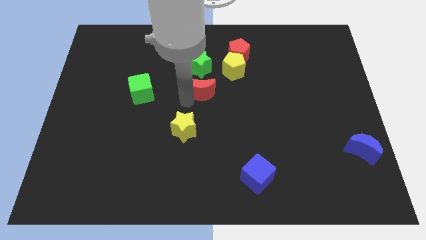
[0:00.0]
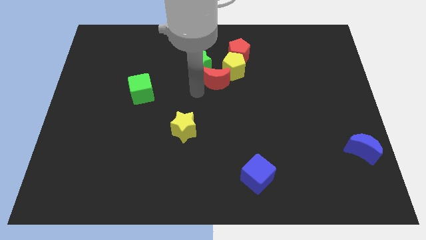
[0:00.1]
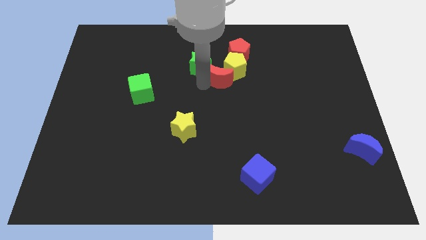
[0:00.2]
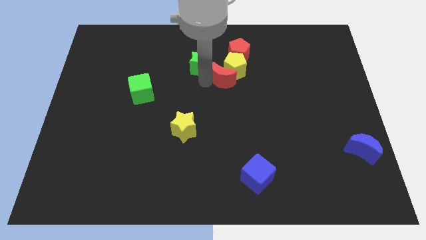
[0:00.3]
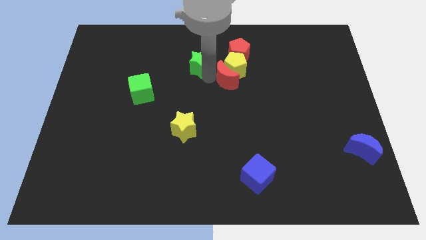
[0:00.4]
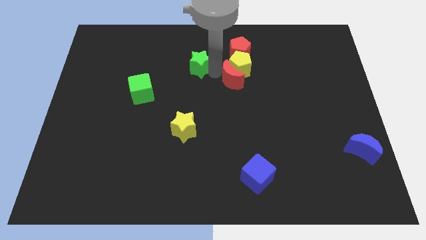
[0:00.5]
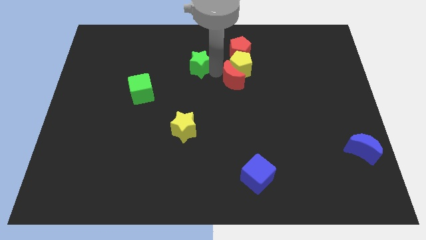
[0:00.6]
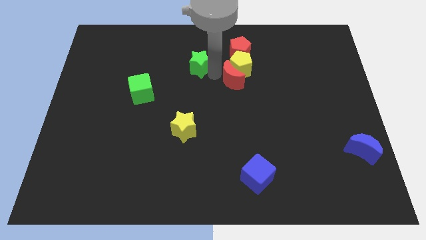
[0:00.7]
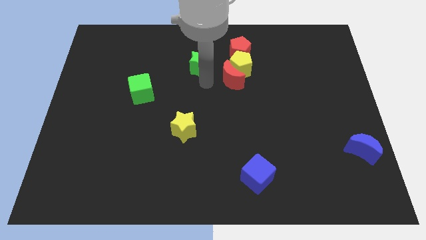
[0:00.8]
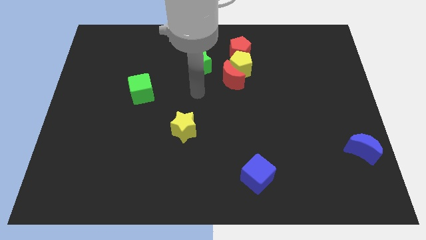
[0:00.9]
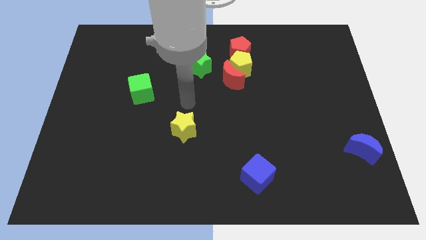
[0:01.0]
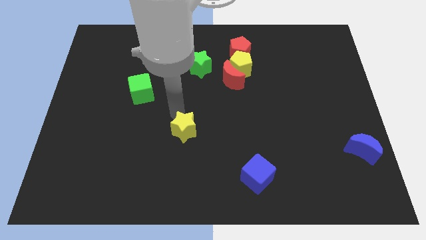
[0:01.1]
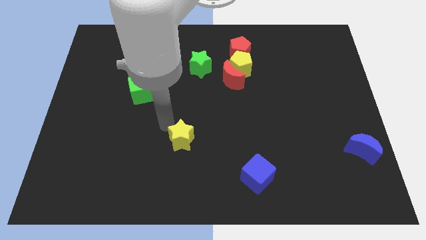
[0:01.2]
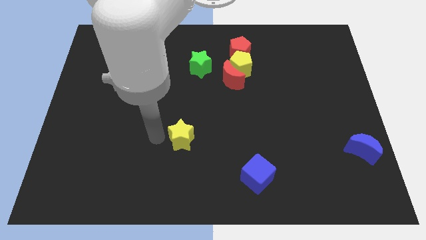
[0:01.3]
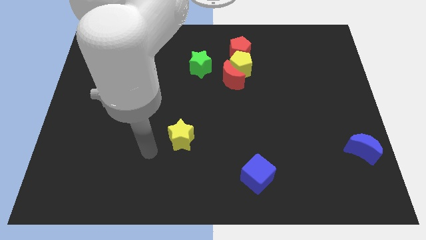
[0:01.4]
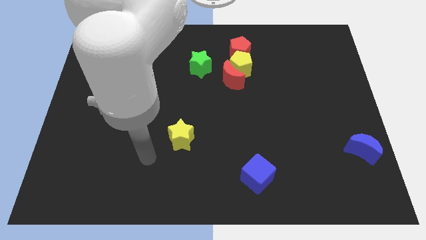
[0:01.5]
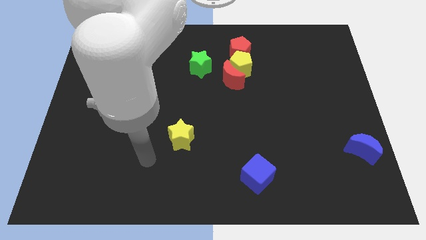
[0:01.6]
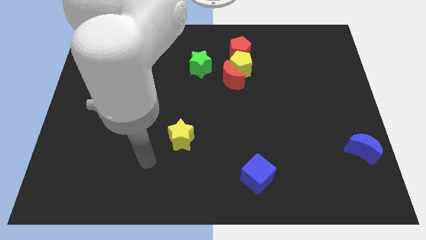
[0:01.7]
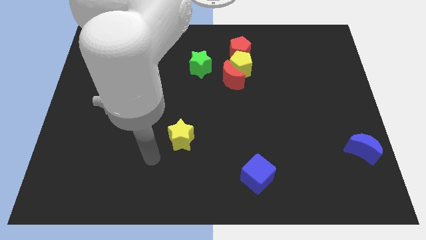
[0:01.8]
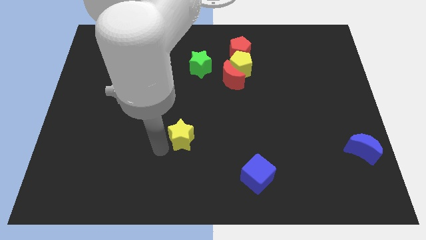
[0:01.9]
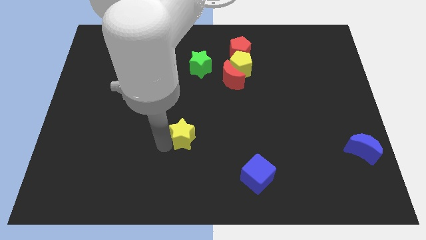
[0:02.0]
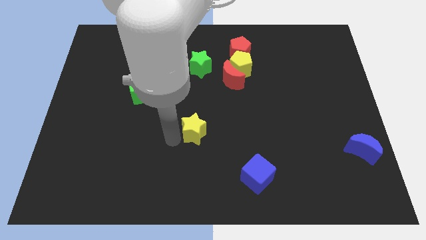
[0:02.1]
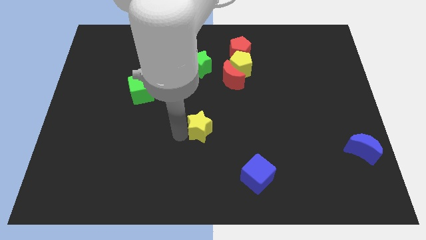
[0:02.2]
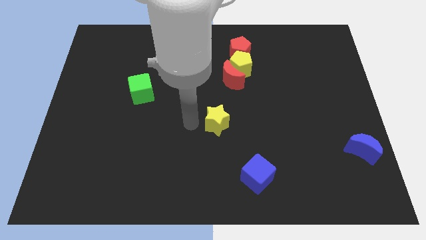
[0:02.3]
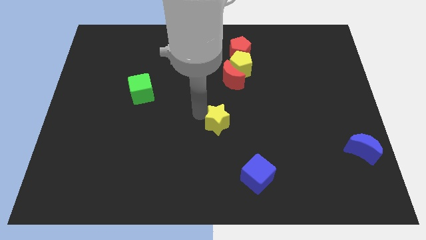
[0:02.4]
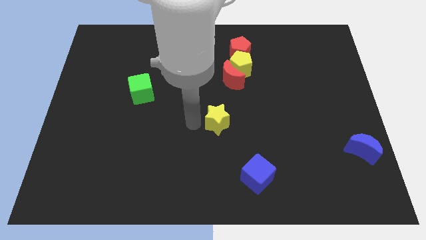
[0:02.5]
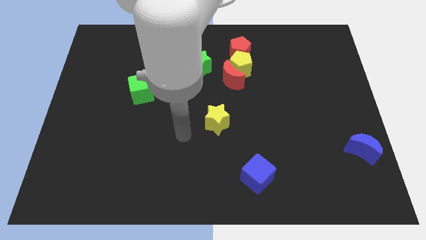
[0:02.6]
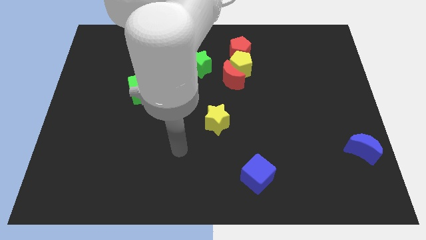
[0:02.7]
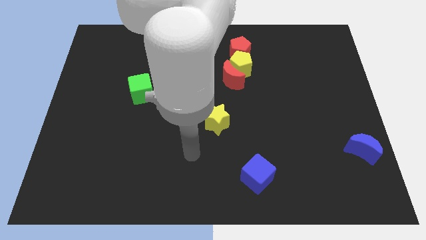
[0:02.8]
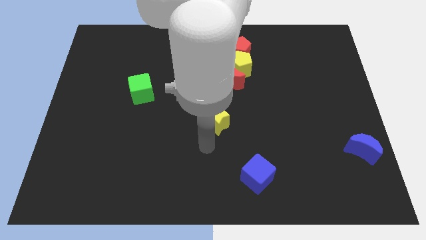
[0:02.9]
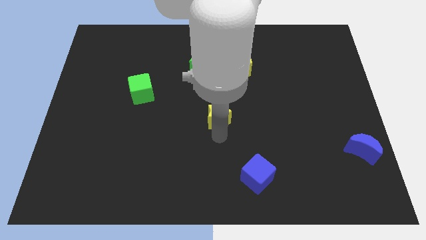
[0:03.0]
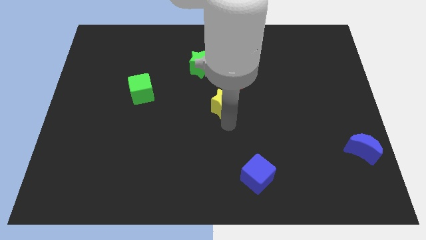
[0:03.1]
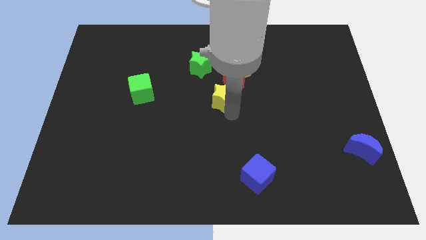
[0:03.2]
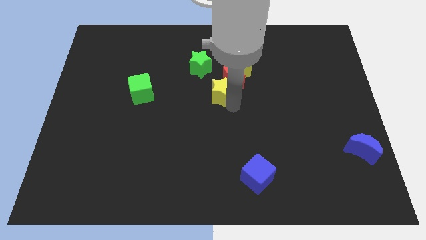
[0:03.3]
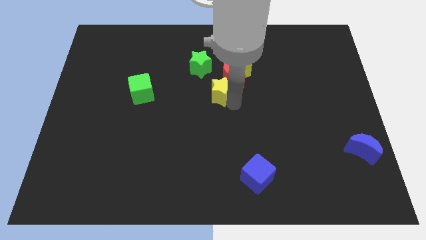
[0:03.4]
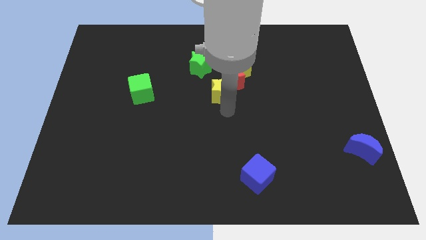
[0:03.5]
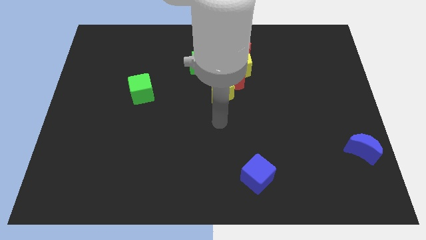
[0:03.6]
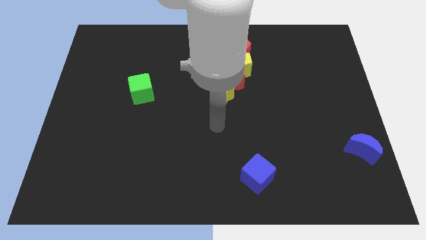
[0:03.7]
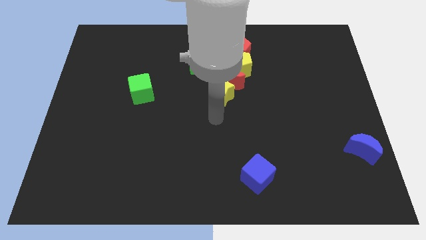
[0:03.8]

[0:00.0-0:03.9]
push the red moon and yellow star into yellow pentagon

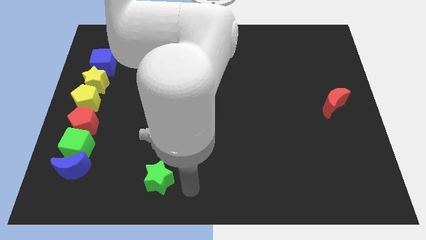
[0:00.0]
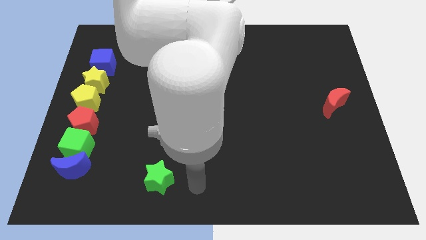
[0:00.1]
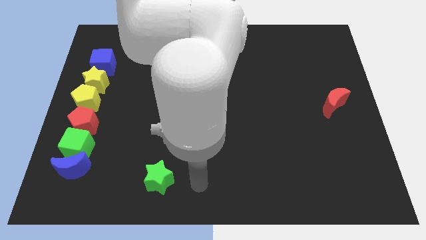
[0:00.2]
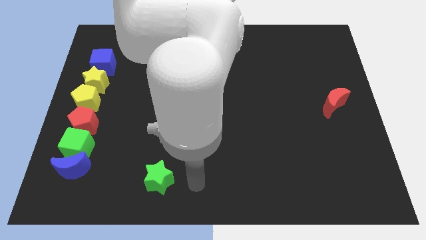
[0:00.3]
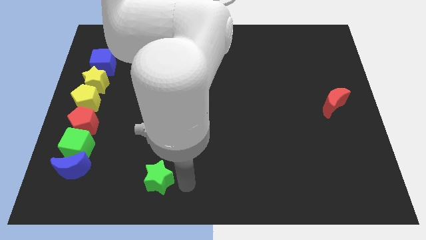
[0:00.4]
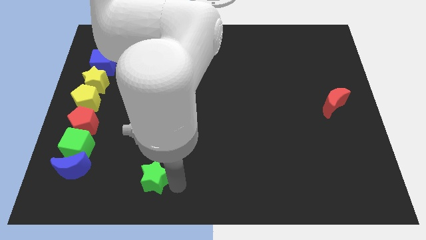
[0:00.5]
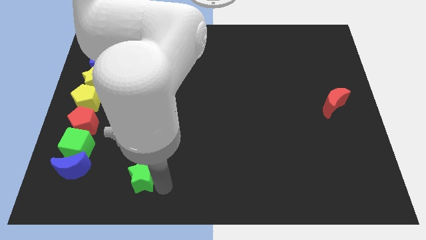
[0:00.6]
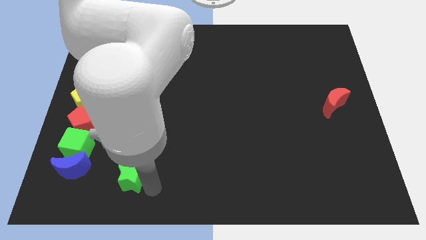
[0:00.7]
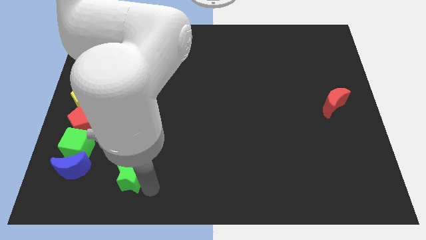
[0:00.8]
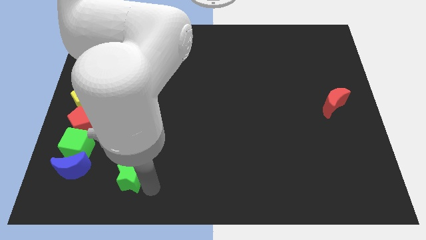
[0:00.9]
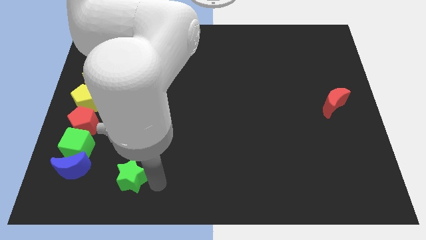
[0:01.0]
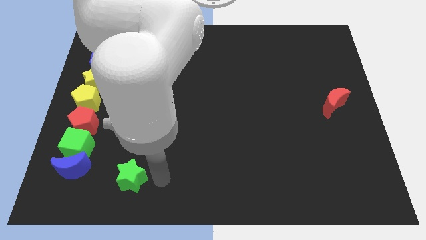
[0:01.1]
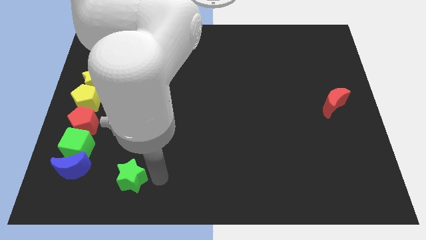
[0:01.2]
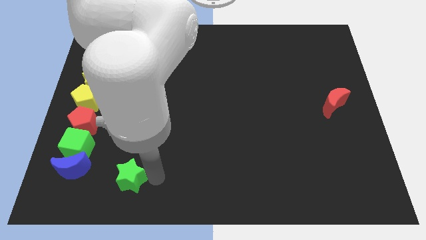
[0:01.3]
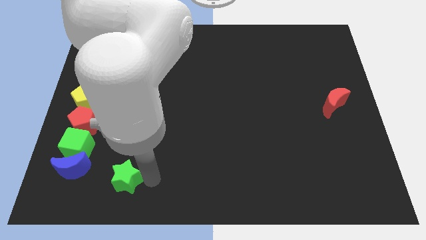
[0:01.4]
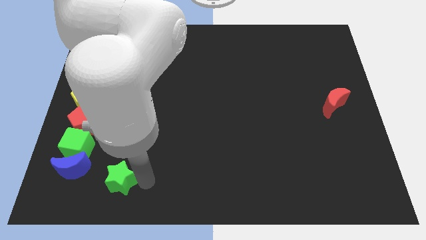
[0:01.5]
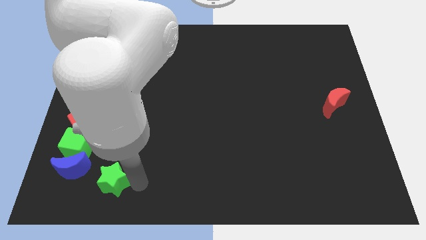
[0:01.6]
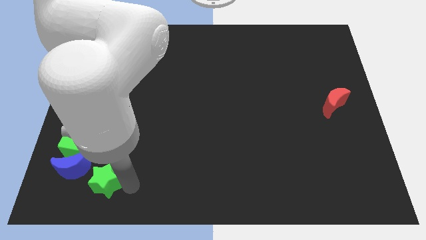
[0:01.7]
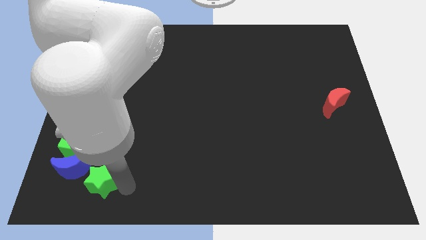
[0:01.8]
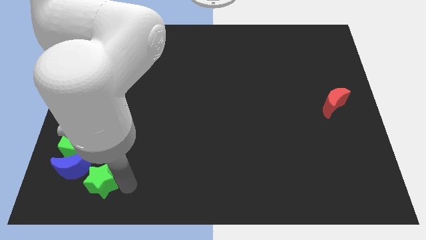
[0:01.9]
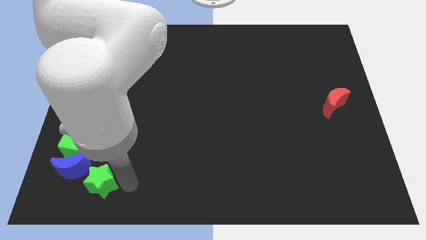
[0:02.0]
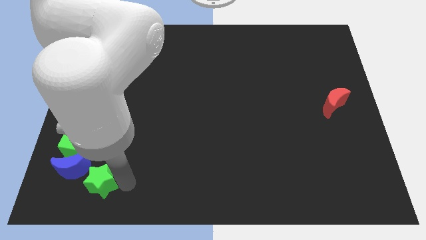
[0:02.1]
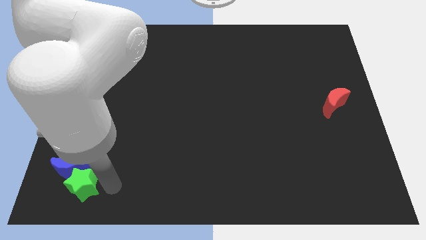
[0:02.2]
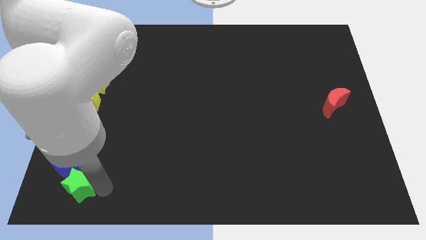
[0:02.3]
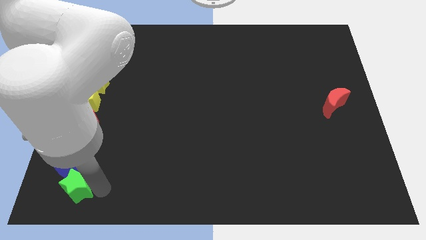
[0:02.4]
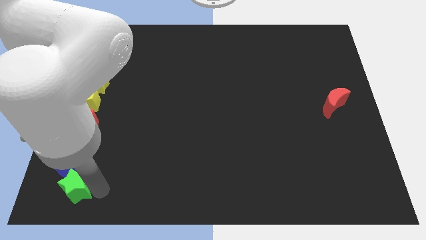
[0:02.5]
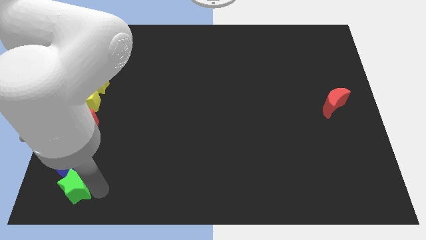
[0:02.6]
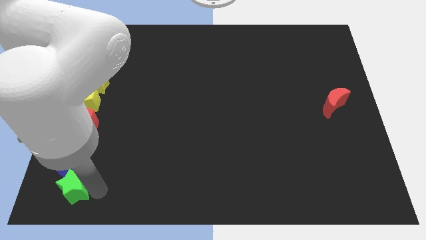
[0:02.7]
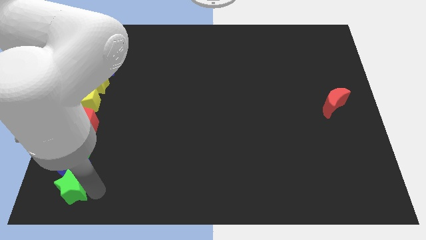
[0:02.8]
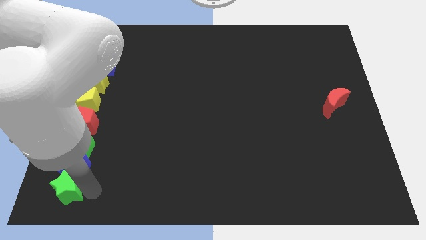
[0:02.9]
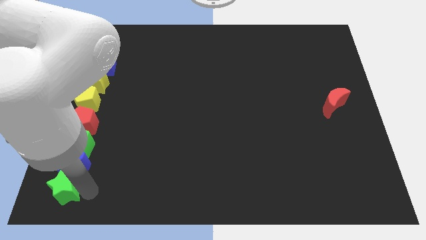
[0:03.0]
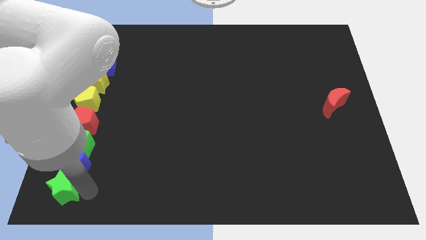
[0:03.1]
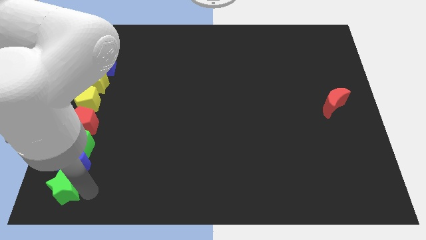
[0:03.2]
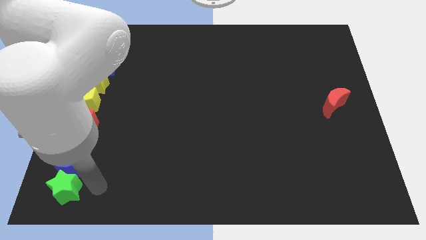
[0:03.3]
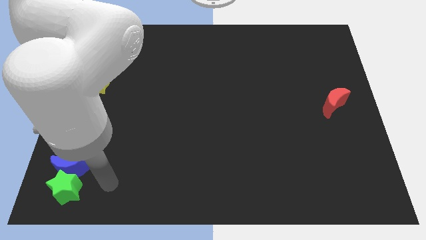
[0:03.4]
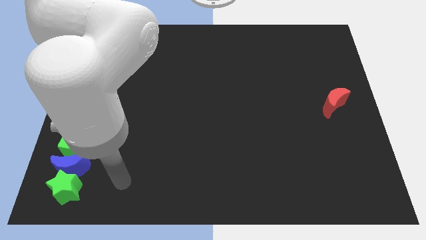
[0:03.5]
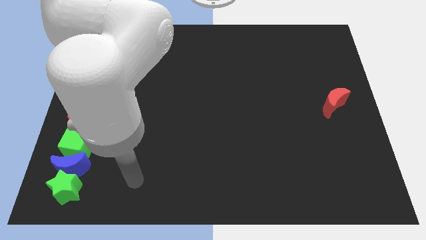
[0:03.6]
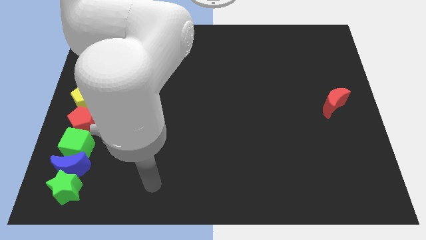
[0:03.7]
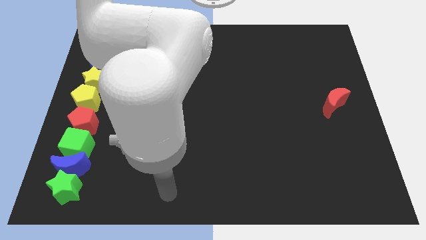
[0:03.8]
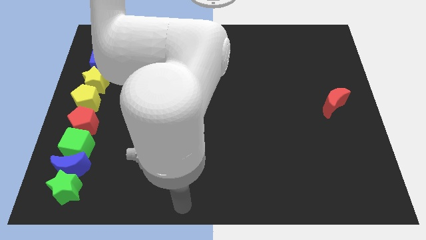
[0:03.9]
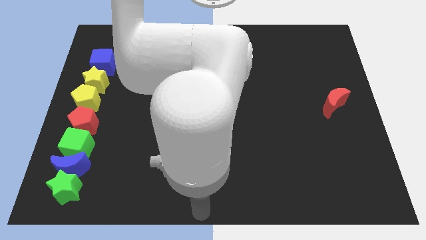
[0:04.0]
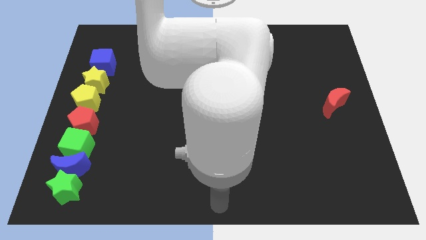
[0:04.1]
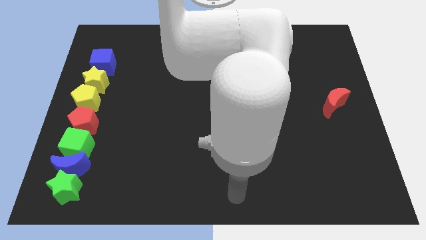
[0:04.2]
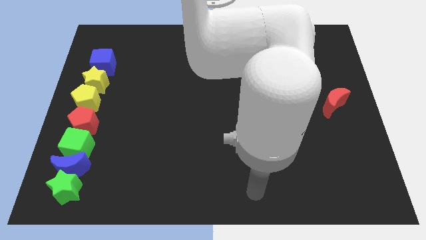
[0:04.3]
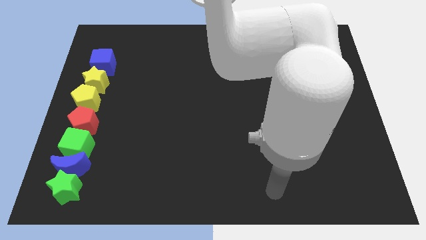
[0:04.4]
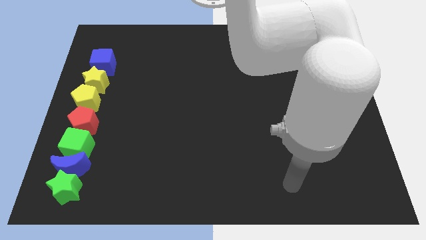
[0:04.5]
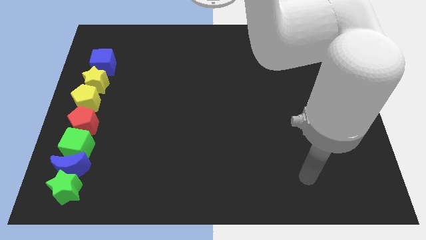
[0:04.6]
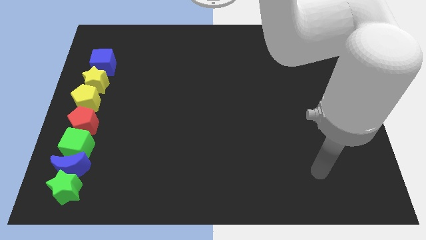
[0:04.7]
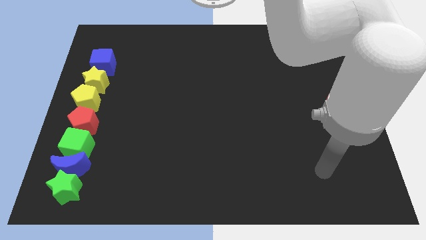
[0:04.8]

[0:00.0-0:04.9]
put the green star below the blue moon

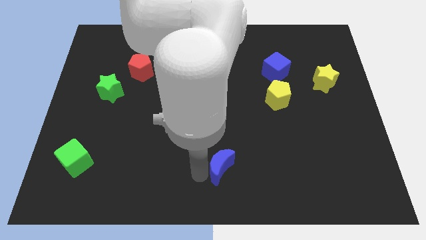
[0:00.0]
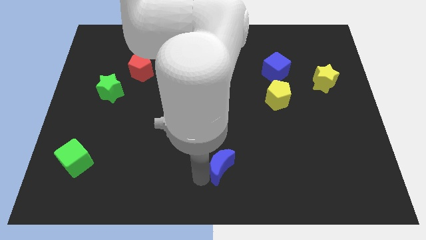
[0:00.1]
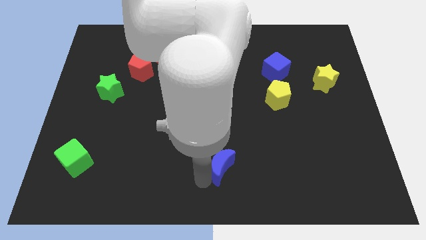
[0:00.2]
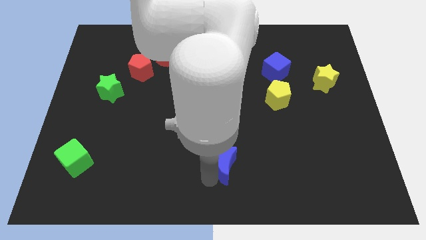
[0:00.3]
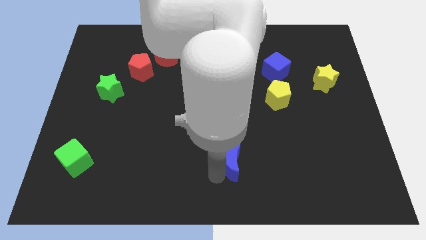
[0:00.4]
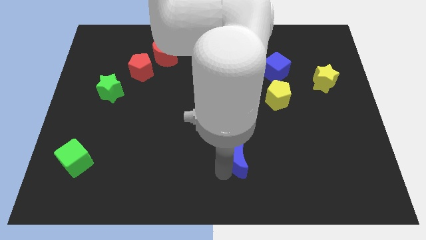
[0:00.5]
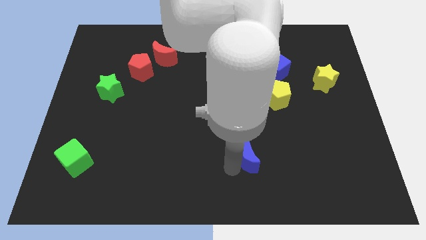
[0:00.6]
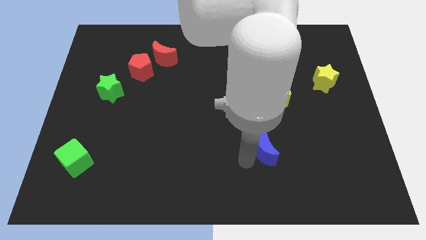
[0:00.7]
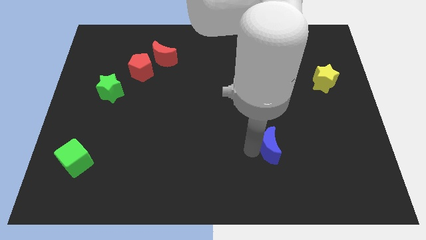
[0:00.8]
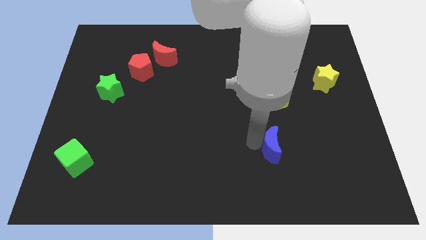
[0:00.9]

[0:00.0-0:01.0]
move the blue crescent to the right
